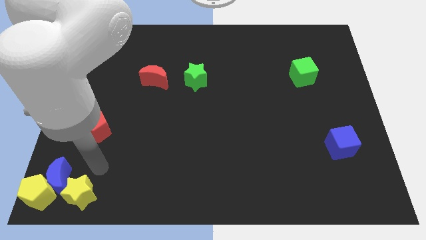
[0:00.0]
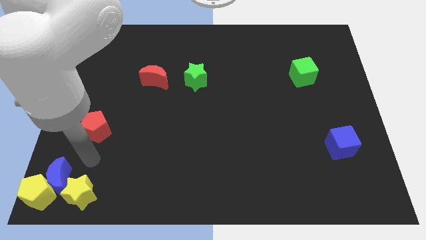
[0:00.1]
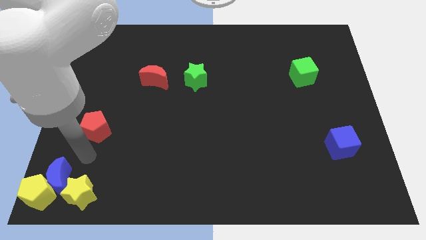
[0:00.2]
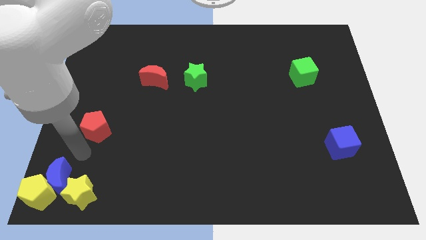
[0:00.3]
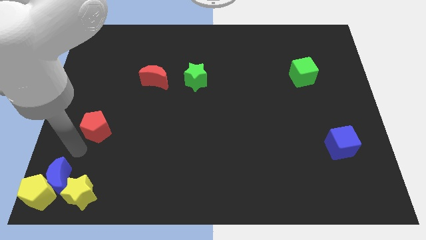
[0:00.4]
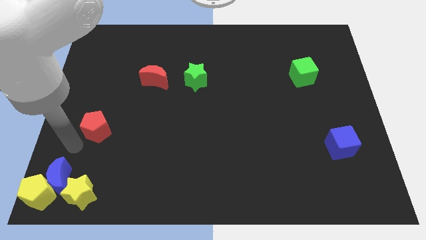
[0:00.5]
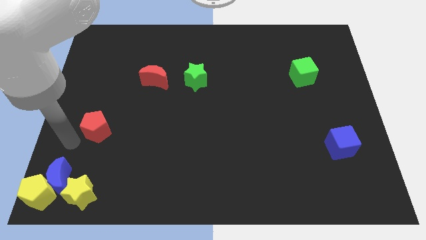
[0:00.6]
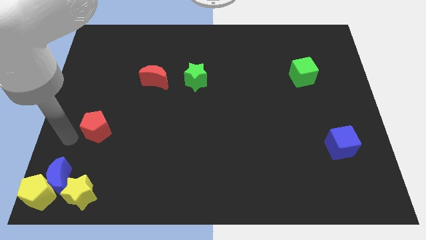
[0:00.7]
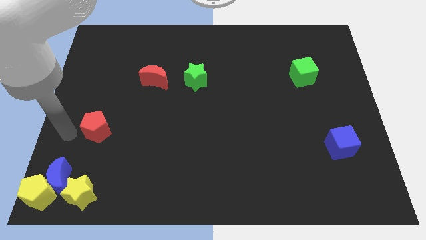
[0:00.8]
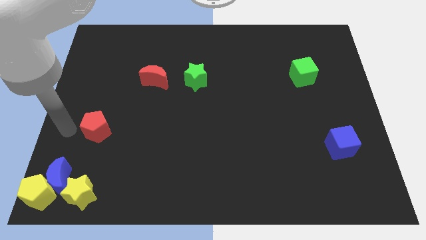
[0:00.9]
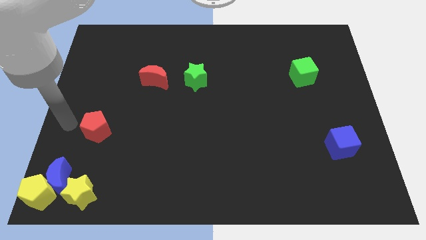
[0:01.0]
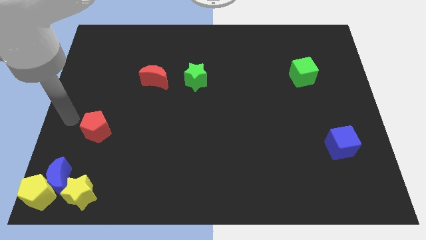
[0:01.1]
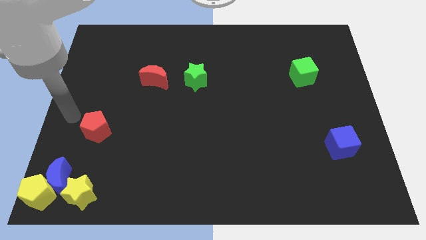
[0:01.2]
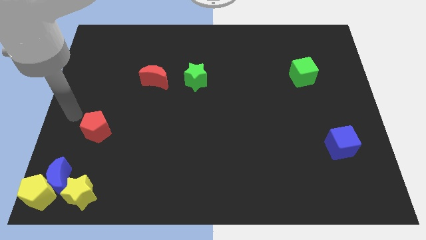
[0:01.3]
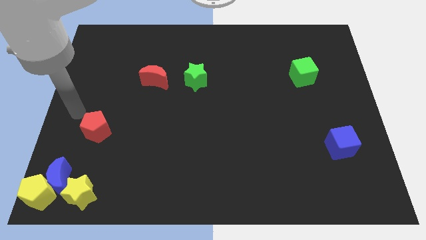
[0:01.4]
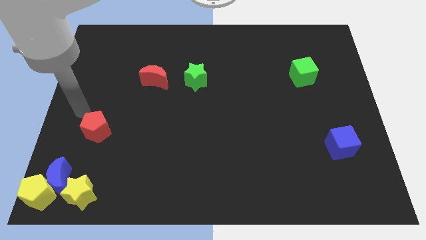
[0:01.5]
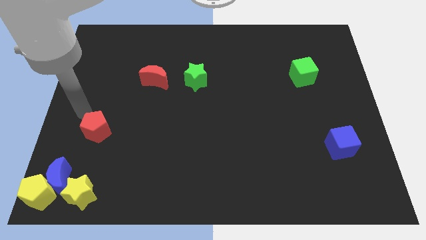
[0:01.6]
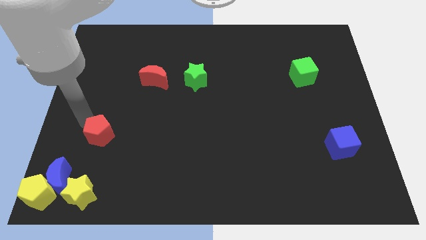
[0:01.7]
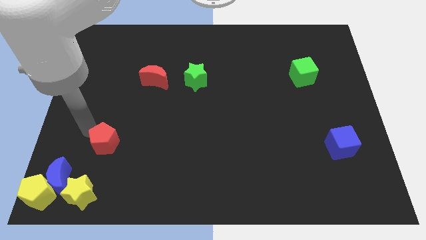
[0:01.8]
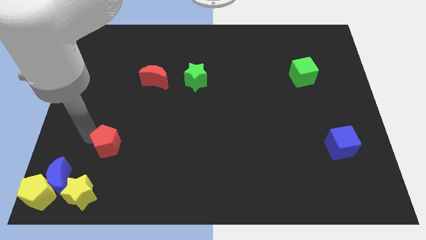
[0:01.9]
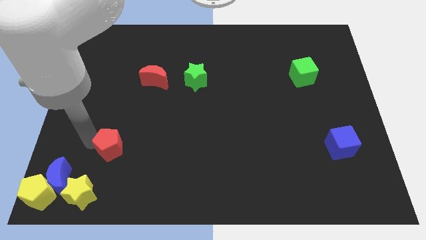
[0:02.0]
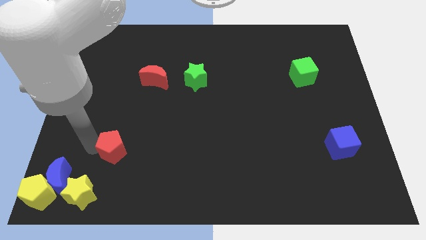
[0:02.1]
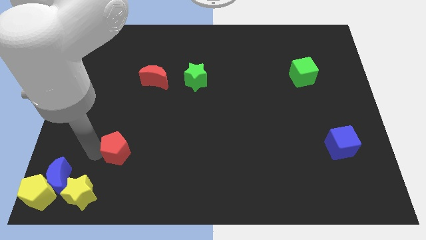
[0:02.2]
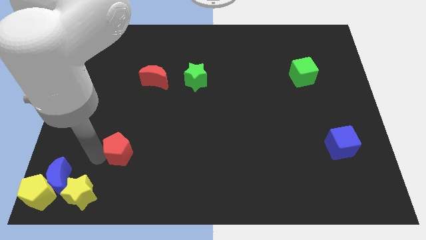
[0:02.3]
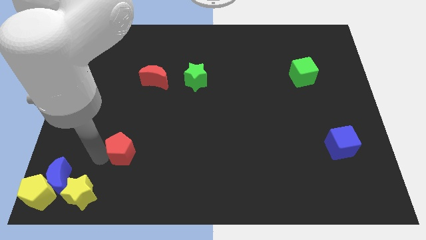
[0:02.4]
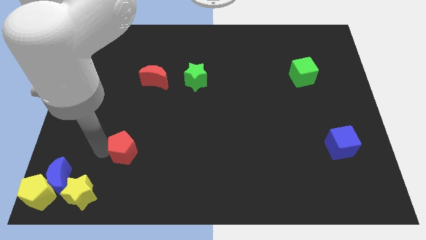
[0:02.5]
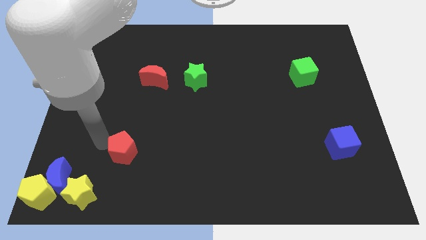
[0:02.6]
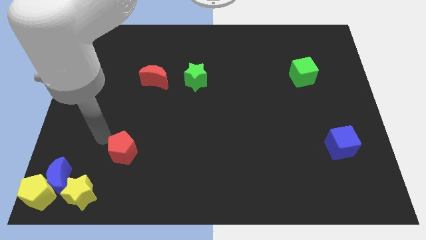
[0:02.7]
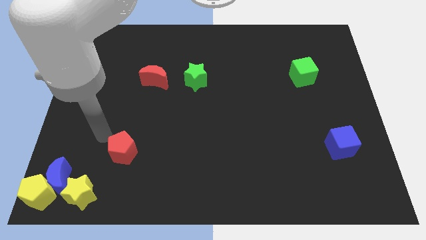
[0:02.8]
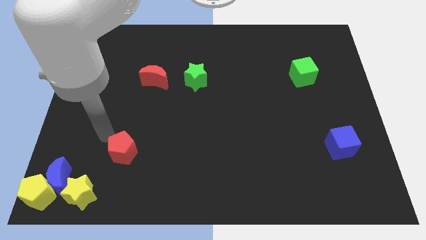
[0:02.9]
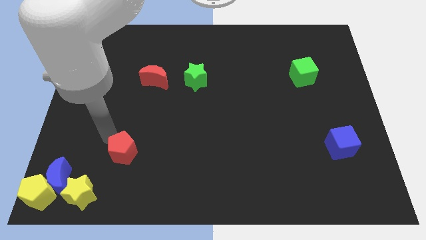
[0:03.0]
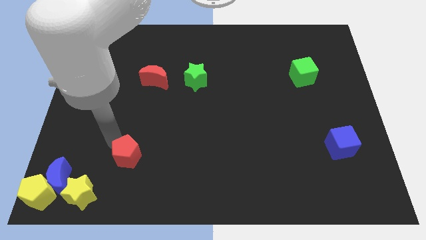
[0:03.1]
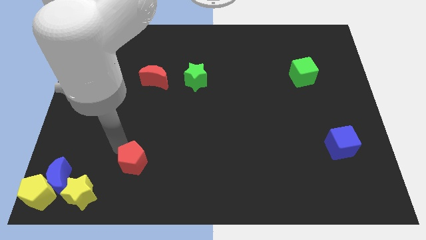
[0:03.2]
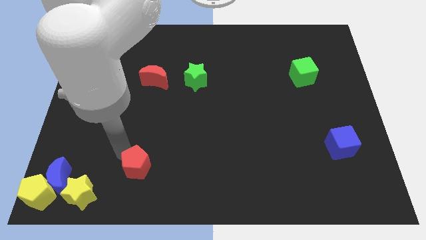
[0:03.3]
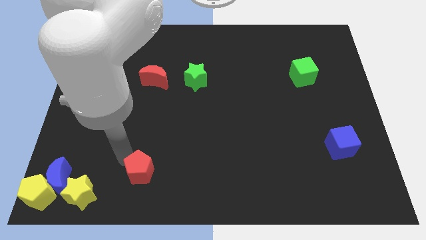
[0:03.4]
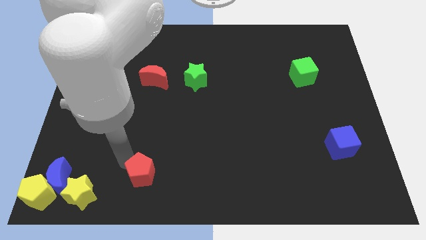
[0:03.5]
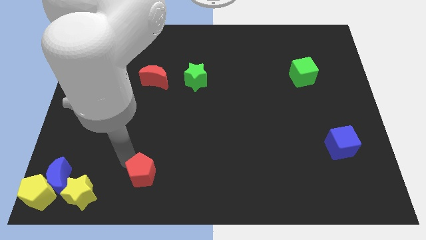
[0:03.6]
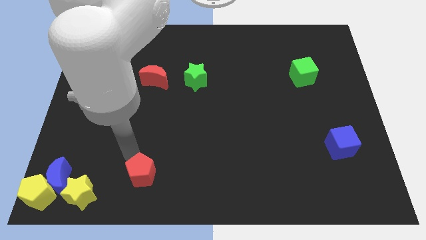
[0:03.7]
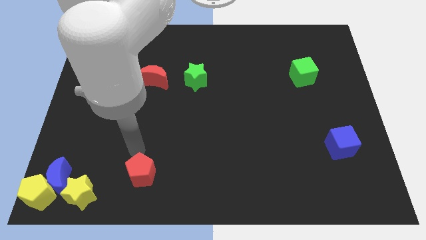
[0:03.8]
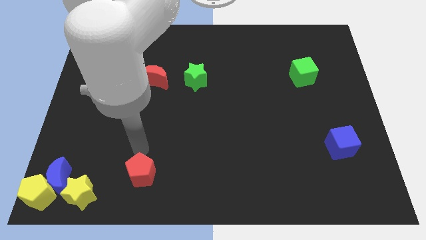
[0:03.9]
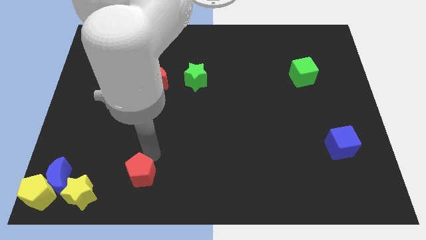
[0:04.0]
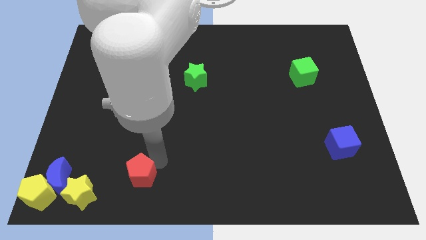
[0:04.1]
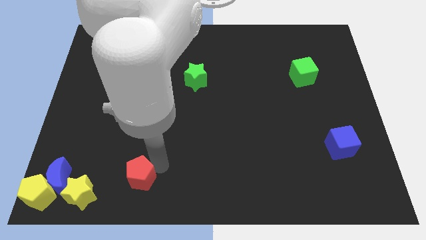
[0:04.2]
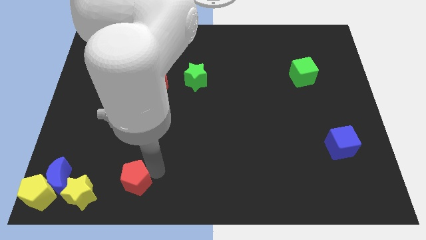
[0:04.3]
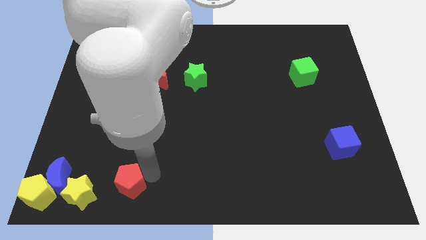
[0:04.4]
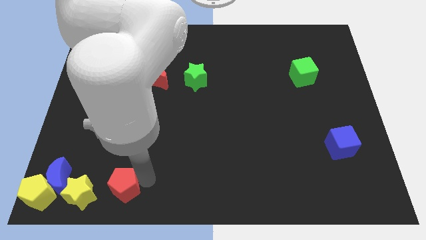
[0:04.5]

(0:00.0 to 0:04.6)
place the red pentagon at the right side of the yellow star

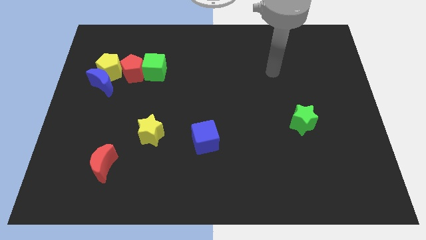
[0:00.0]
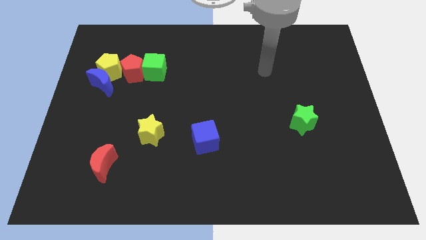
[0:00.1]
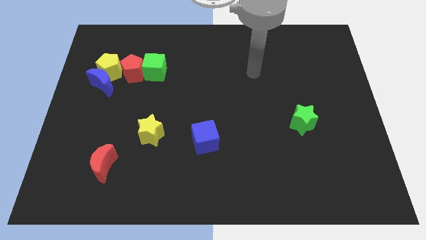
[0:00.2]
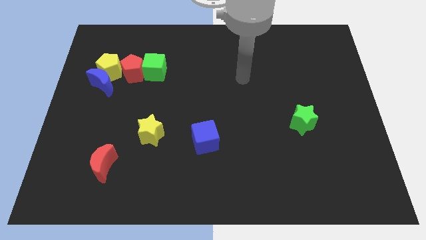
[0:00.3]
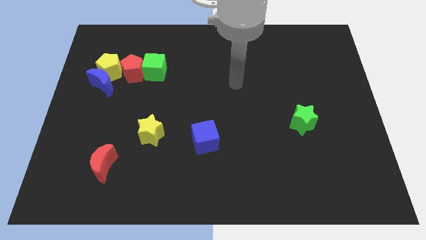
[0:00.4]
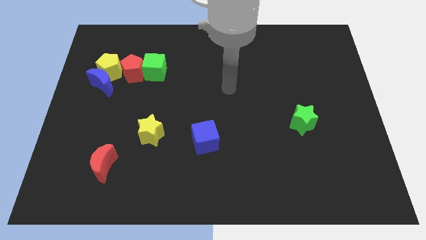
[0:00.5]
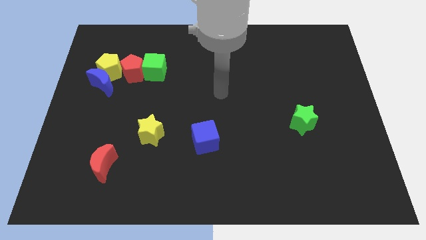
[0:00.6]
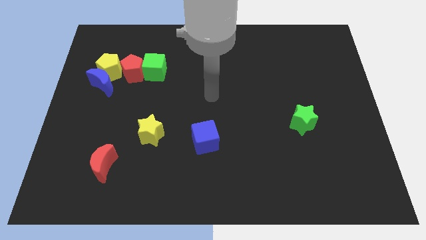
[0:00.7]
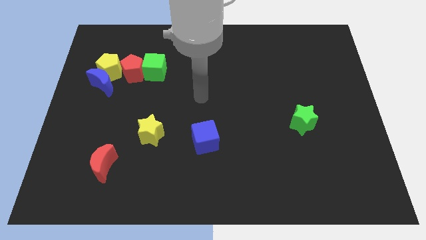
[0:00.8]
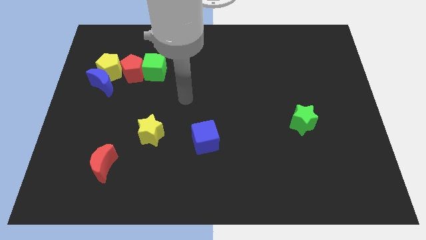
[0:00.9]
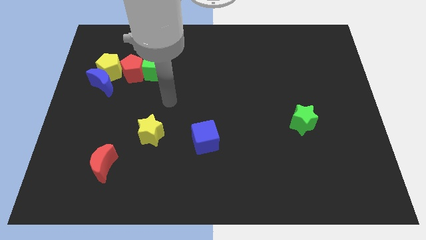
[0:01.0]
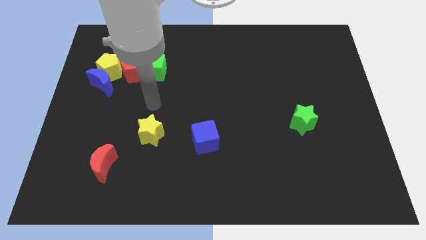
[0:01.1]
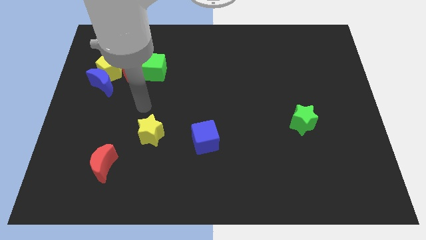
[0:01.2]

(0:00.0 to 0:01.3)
push your hand on the top of the yellow star

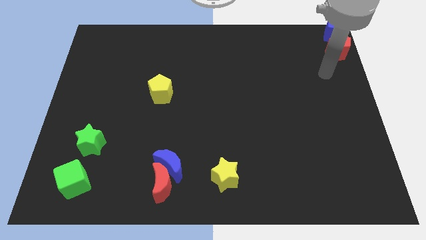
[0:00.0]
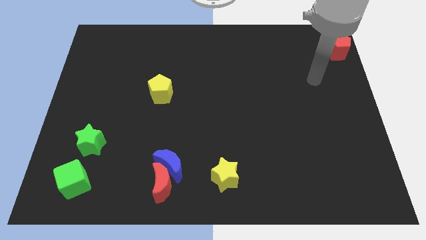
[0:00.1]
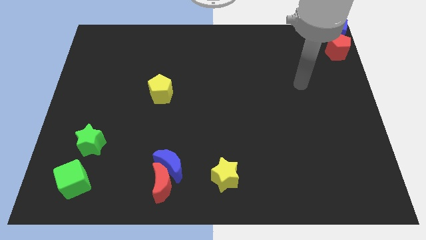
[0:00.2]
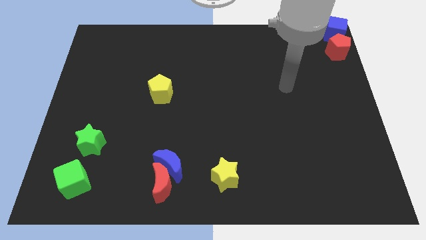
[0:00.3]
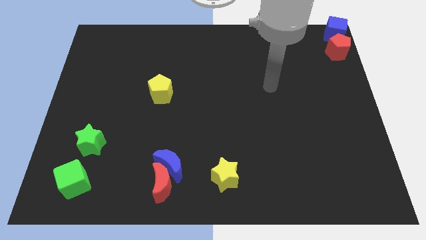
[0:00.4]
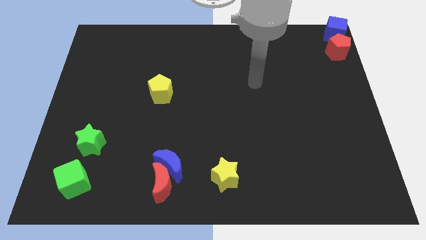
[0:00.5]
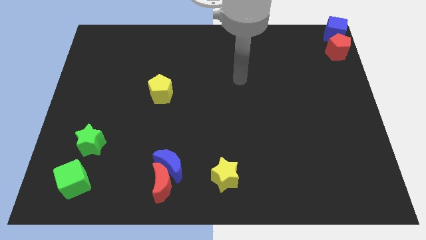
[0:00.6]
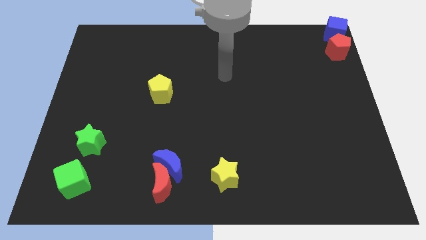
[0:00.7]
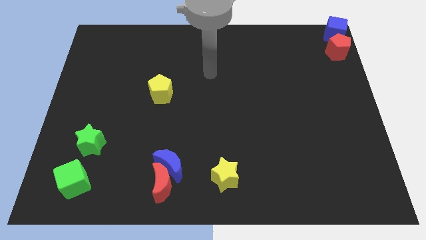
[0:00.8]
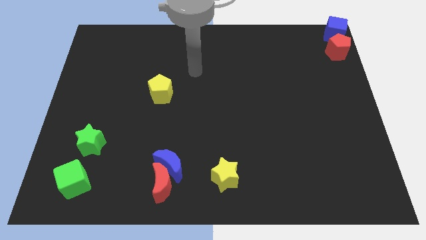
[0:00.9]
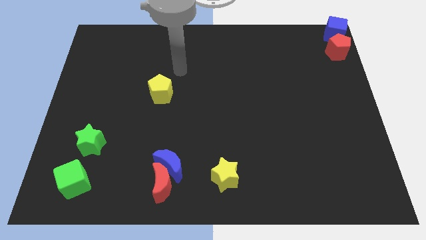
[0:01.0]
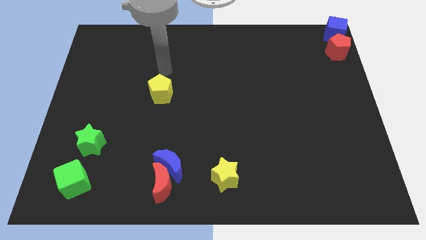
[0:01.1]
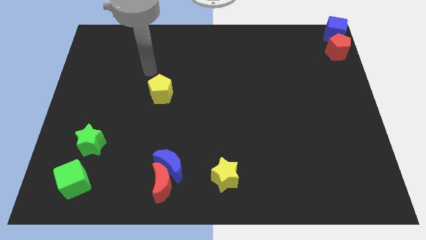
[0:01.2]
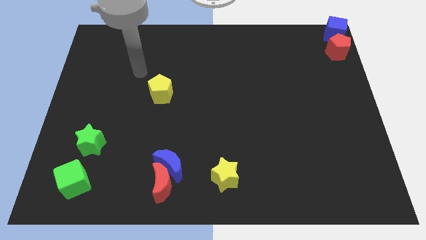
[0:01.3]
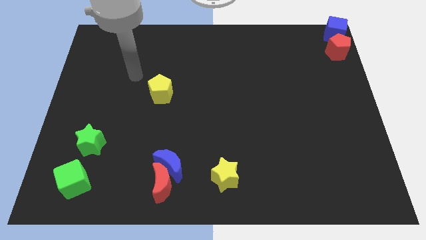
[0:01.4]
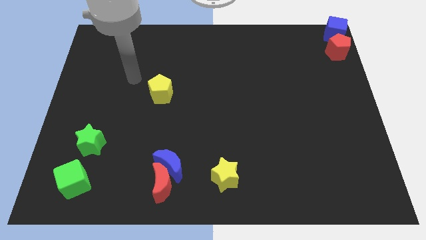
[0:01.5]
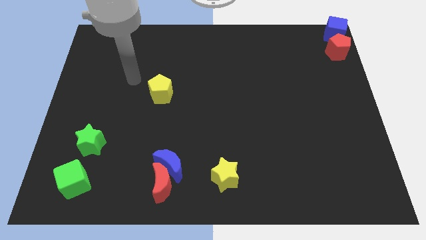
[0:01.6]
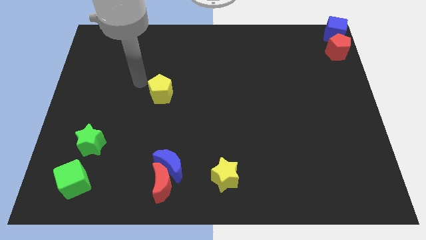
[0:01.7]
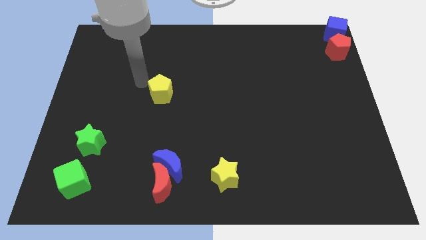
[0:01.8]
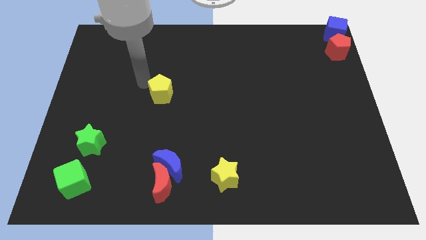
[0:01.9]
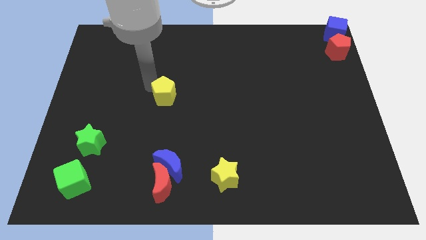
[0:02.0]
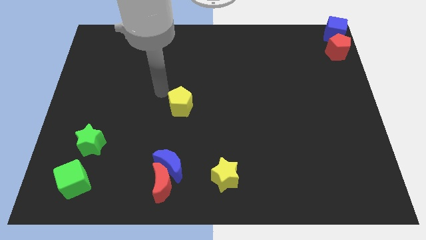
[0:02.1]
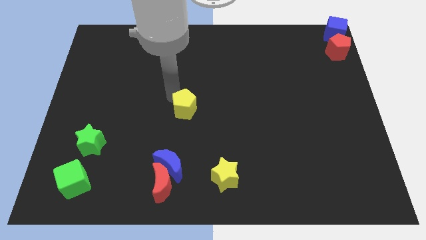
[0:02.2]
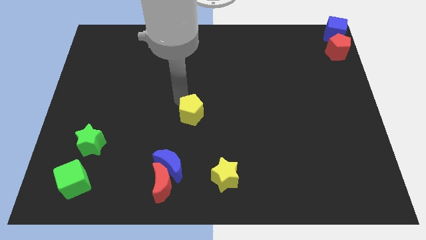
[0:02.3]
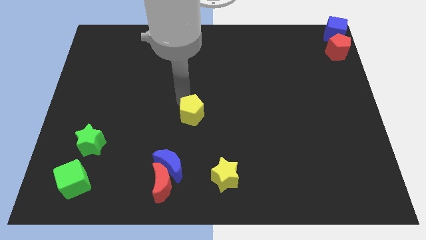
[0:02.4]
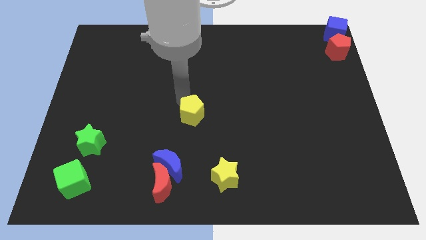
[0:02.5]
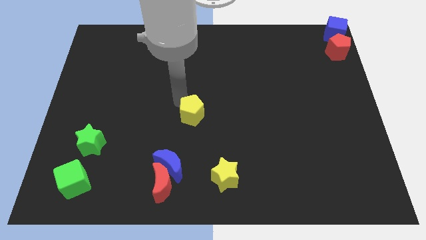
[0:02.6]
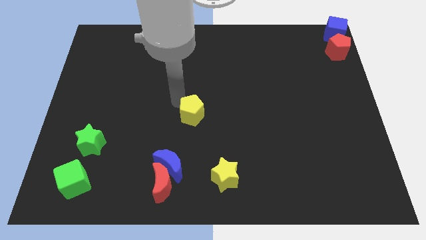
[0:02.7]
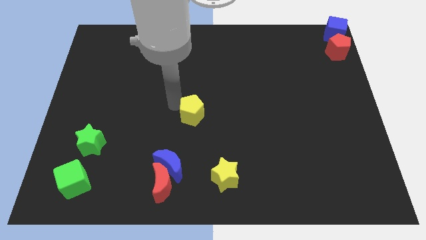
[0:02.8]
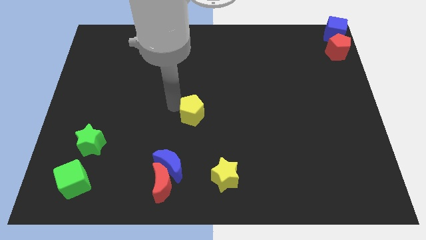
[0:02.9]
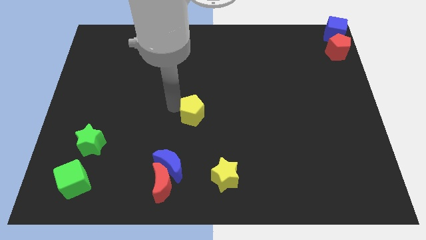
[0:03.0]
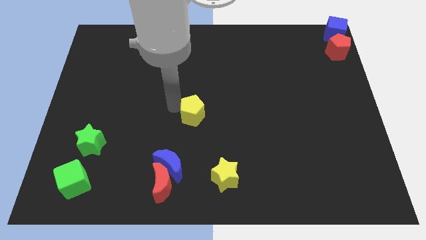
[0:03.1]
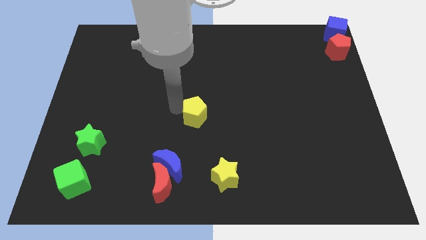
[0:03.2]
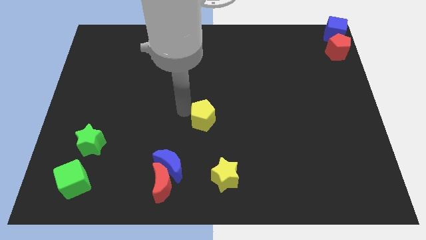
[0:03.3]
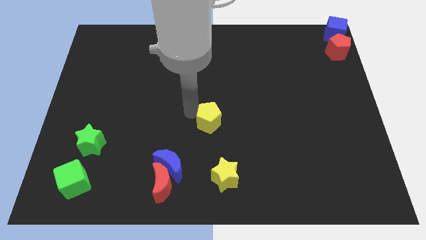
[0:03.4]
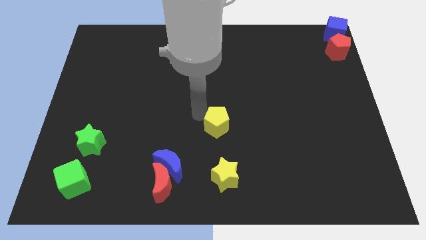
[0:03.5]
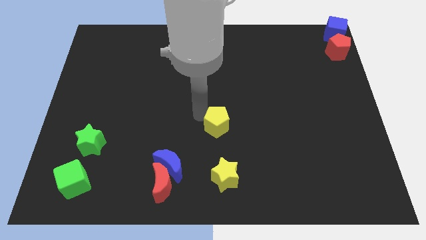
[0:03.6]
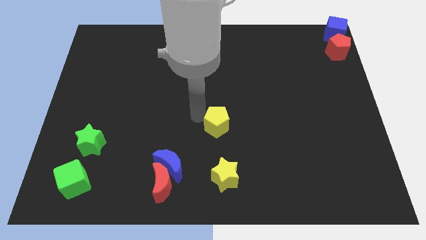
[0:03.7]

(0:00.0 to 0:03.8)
push the yellow pentagon towards the bottom side of the board
